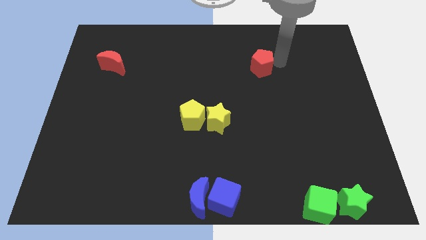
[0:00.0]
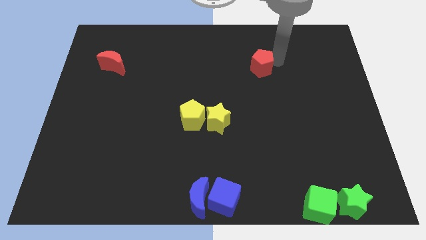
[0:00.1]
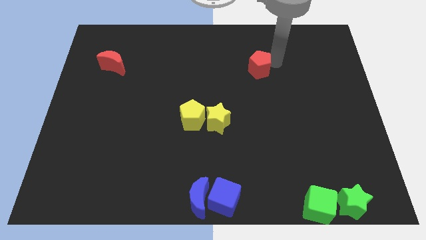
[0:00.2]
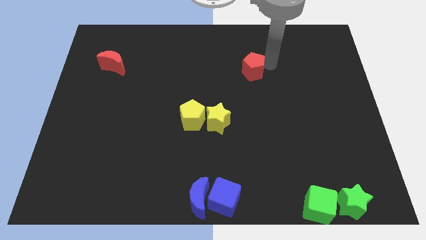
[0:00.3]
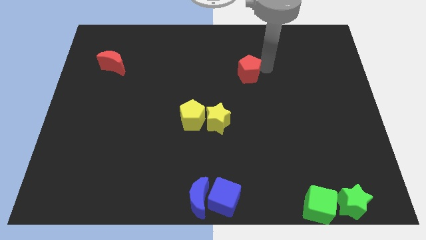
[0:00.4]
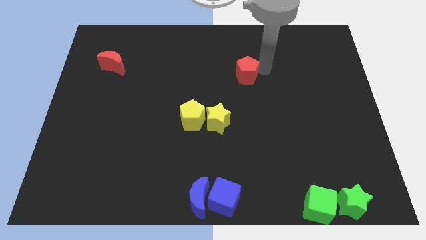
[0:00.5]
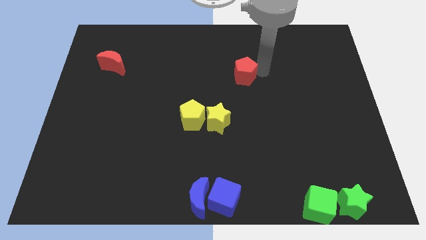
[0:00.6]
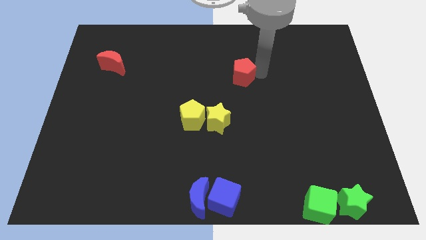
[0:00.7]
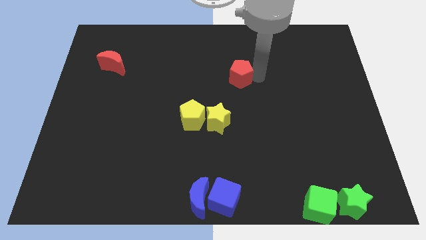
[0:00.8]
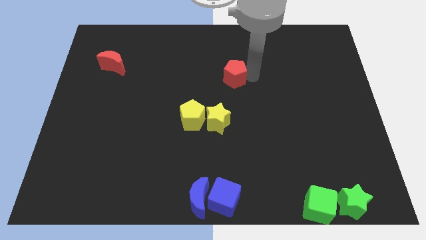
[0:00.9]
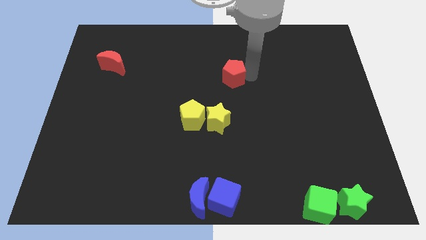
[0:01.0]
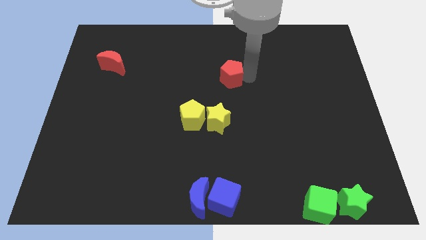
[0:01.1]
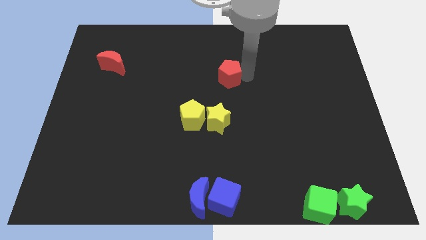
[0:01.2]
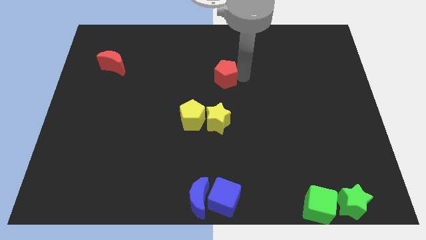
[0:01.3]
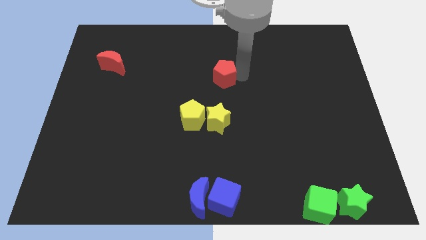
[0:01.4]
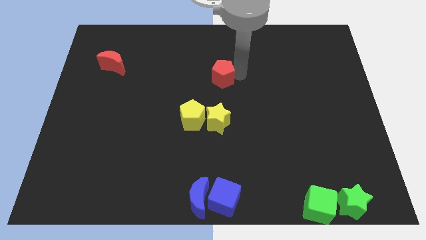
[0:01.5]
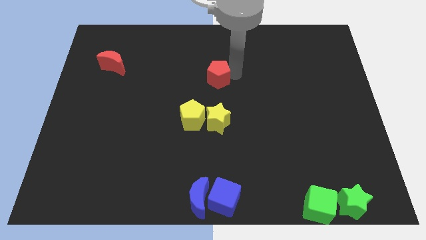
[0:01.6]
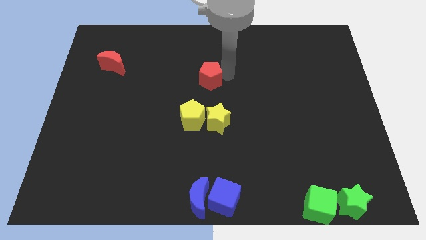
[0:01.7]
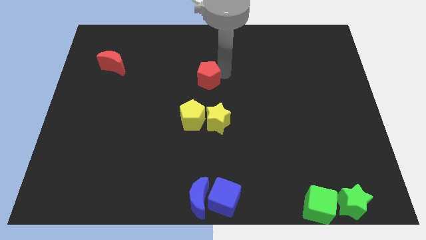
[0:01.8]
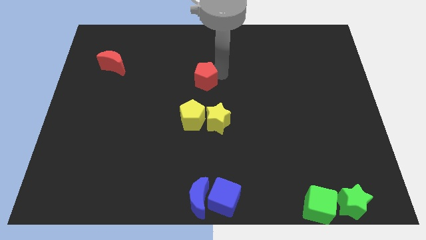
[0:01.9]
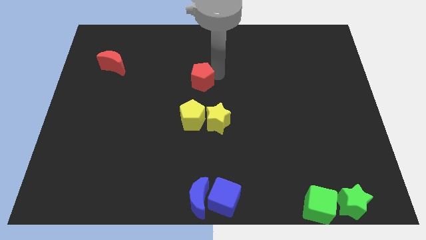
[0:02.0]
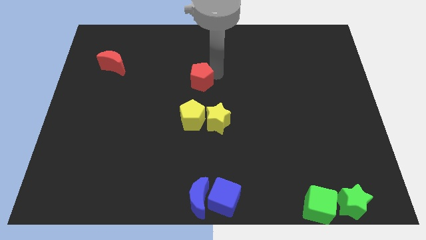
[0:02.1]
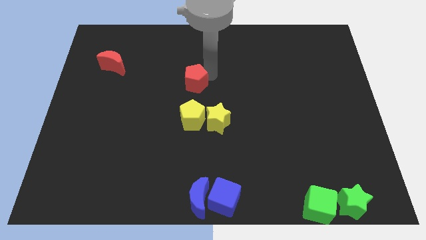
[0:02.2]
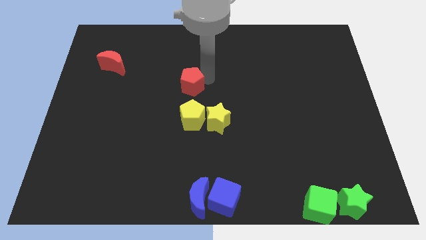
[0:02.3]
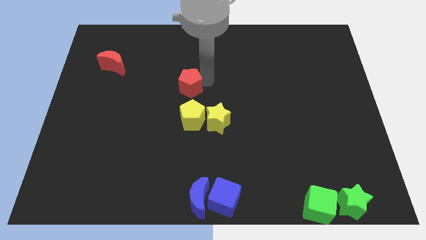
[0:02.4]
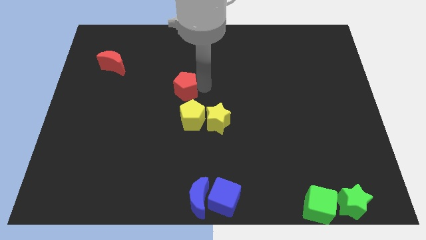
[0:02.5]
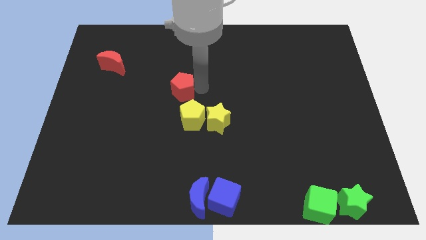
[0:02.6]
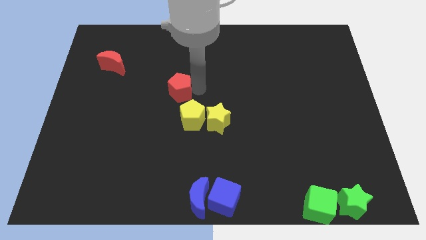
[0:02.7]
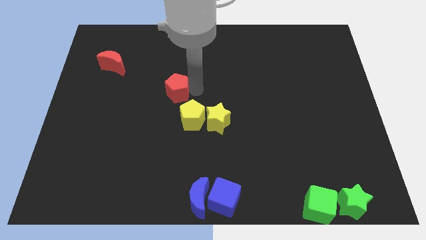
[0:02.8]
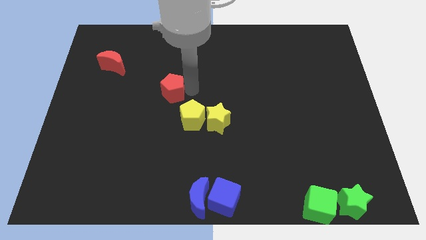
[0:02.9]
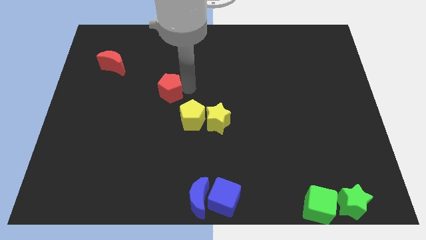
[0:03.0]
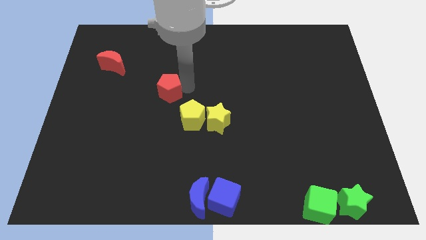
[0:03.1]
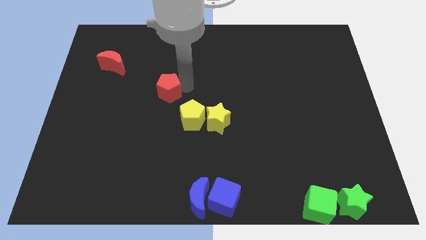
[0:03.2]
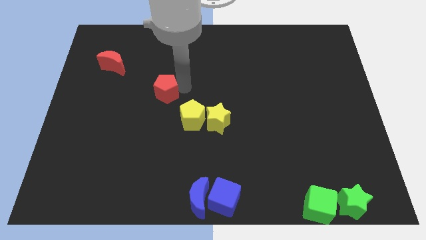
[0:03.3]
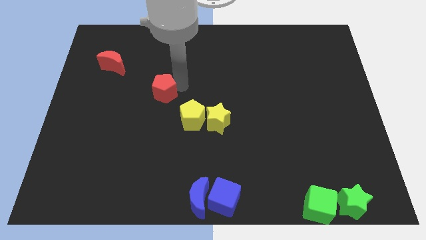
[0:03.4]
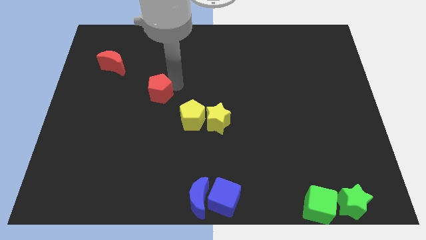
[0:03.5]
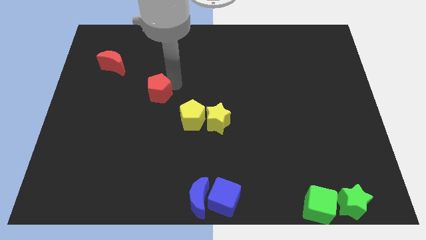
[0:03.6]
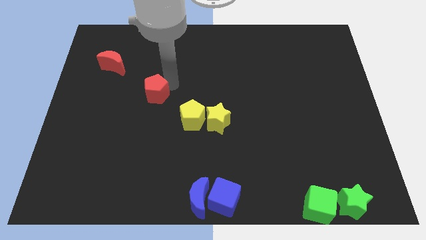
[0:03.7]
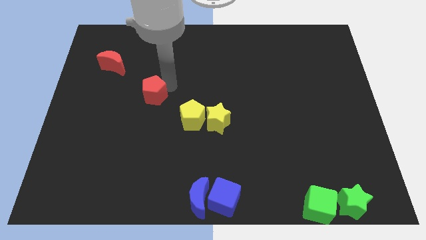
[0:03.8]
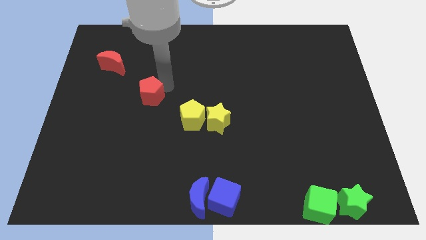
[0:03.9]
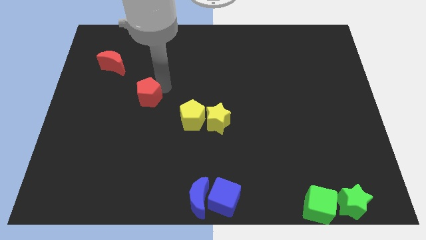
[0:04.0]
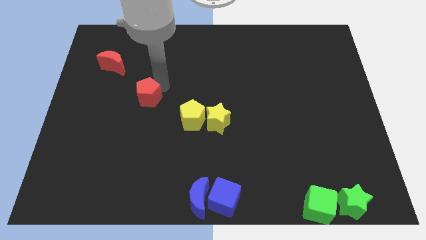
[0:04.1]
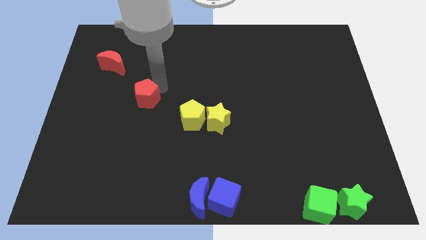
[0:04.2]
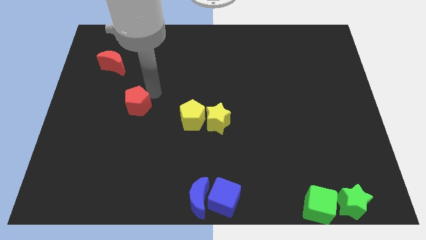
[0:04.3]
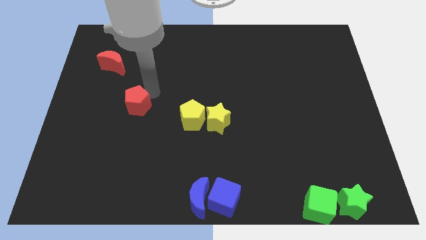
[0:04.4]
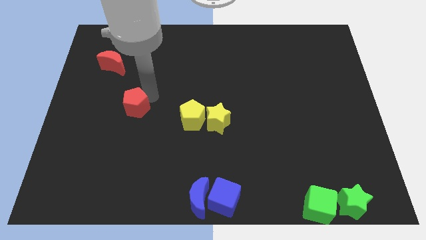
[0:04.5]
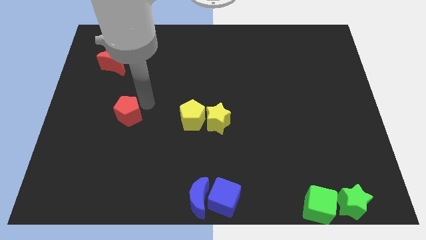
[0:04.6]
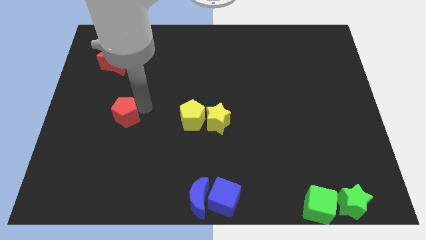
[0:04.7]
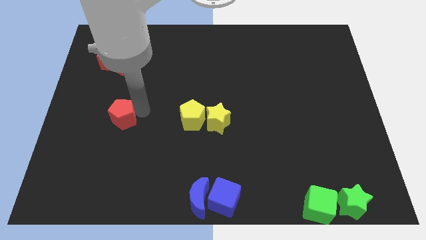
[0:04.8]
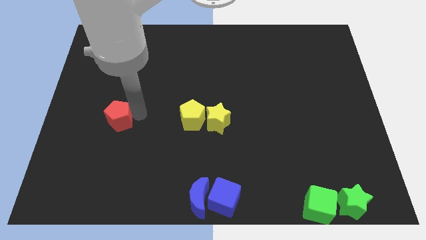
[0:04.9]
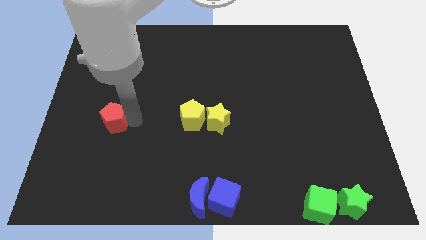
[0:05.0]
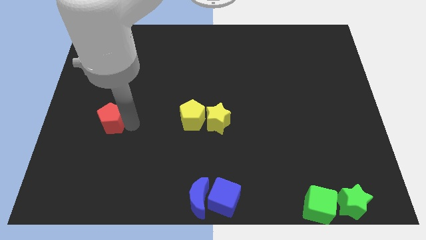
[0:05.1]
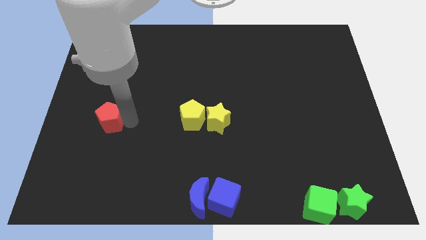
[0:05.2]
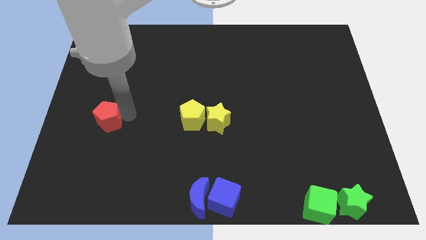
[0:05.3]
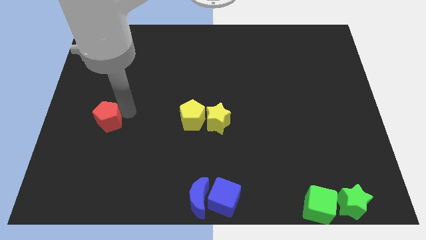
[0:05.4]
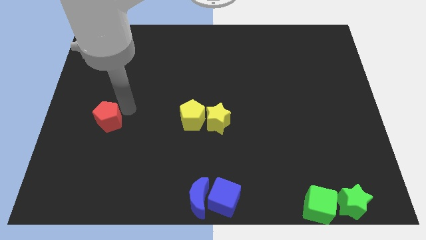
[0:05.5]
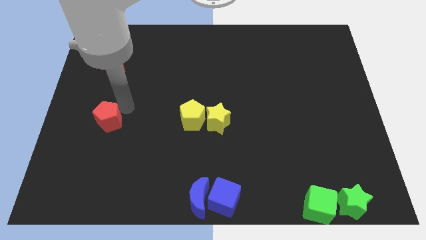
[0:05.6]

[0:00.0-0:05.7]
move the red pentagon horizontally to the left of yellow pentagon

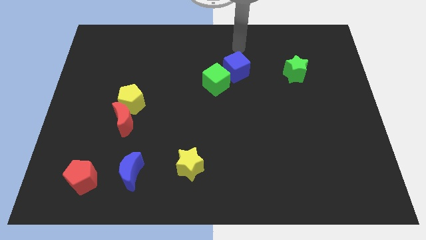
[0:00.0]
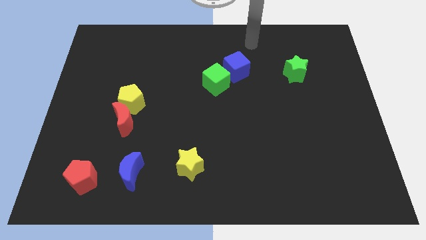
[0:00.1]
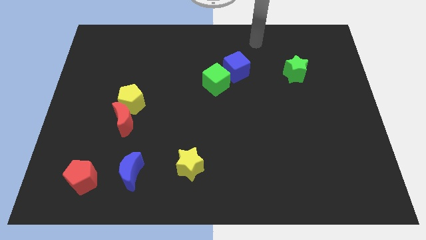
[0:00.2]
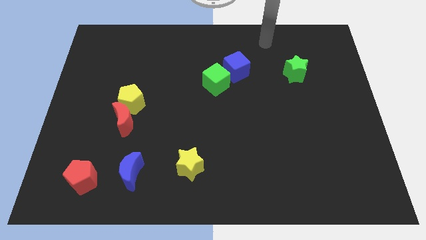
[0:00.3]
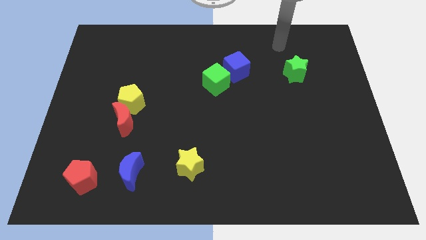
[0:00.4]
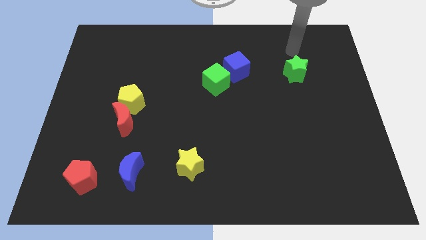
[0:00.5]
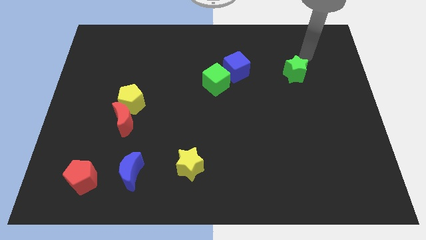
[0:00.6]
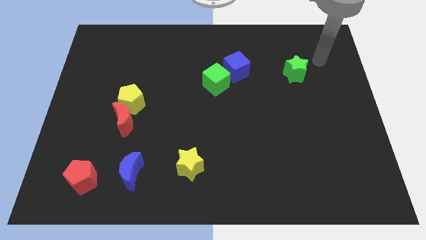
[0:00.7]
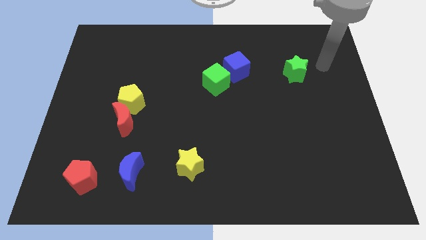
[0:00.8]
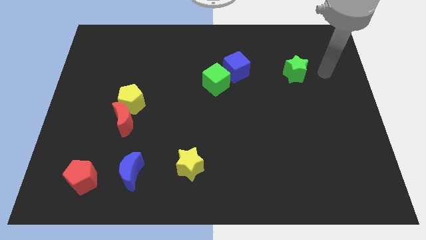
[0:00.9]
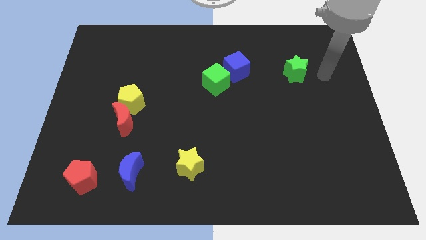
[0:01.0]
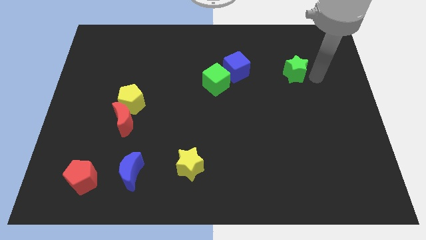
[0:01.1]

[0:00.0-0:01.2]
place your arm to the right of the green star

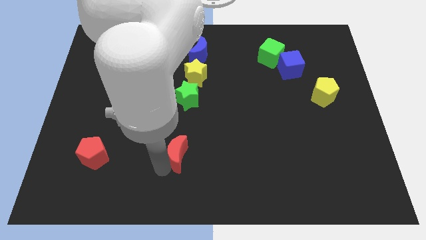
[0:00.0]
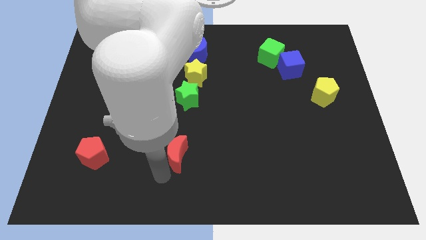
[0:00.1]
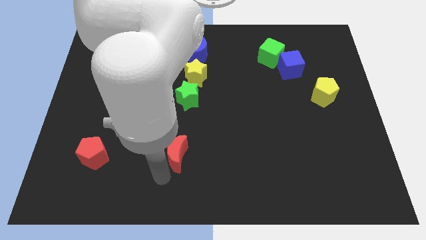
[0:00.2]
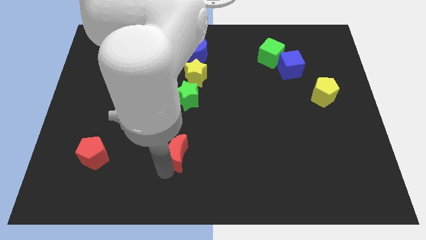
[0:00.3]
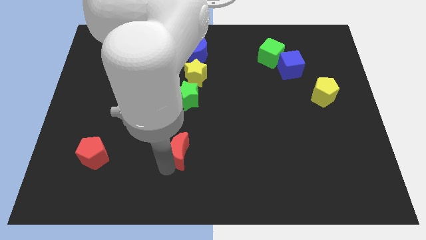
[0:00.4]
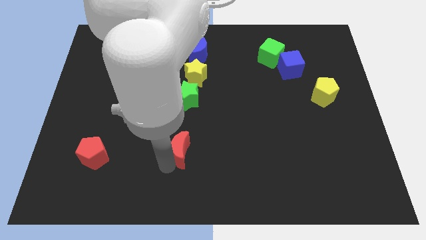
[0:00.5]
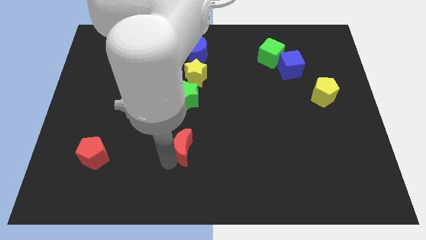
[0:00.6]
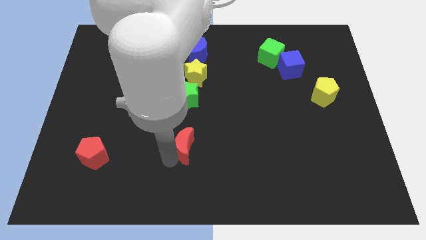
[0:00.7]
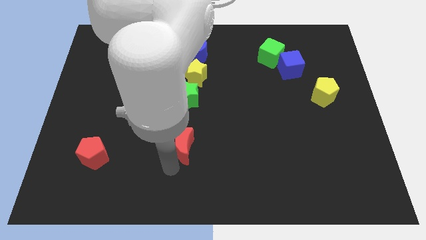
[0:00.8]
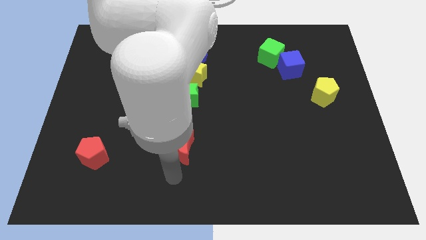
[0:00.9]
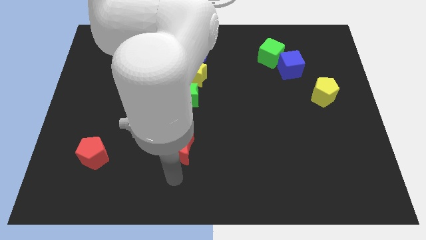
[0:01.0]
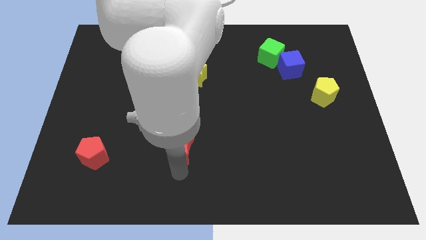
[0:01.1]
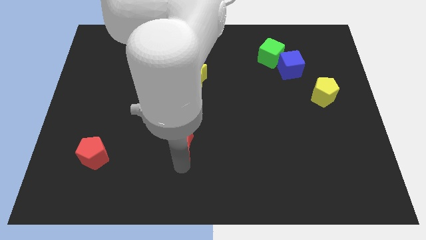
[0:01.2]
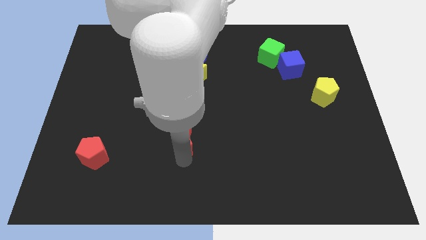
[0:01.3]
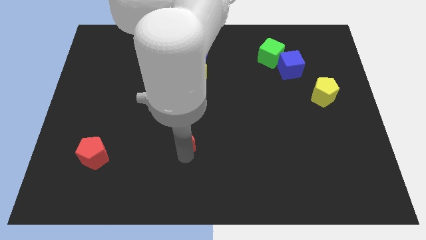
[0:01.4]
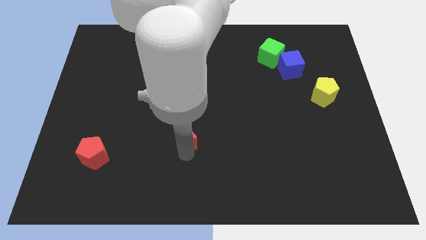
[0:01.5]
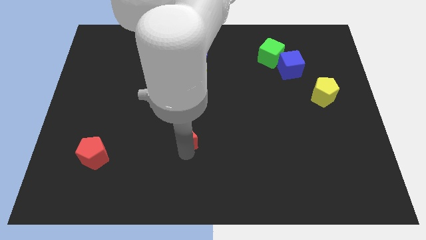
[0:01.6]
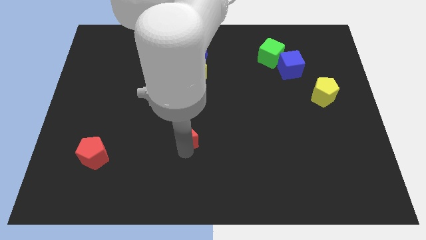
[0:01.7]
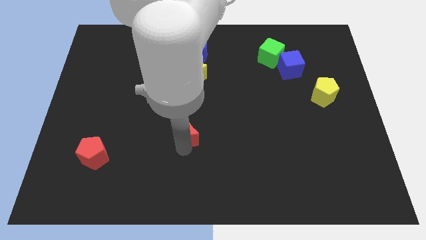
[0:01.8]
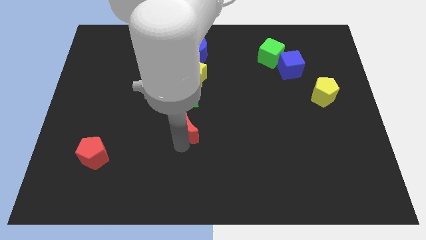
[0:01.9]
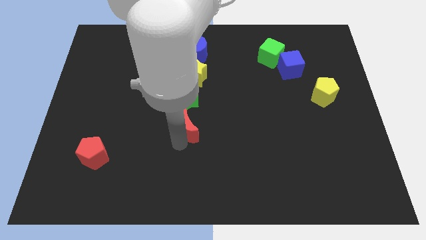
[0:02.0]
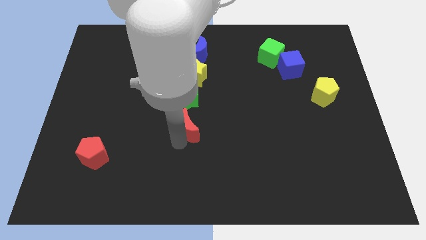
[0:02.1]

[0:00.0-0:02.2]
place red crescent below the green star
